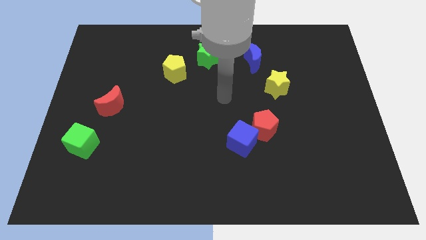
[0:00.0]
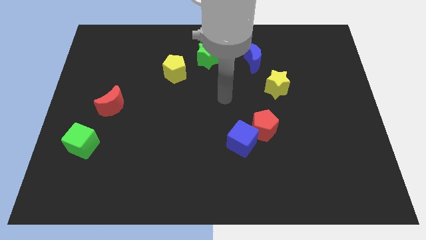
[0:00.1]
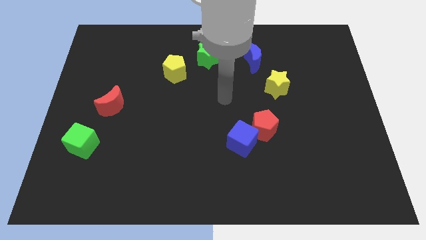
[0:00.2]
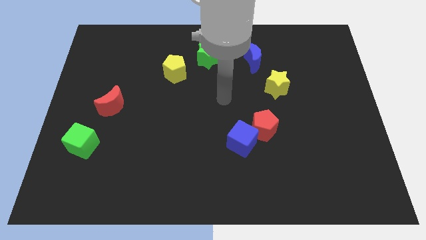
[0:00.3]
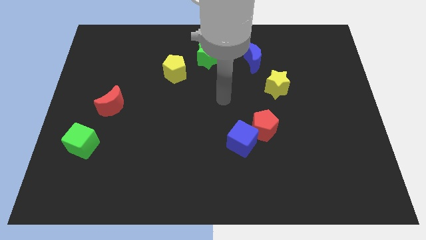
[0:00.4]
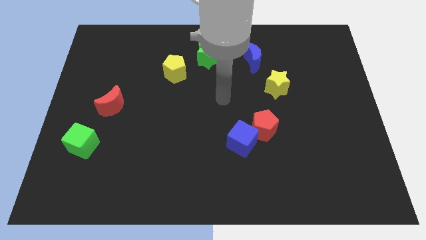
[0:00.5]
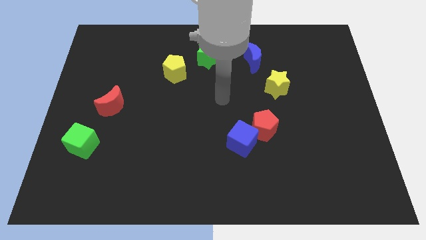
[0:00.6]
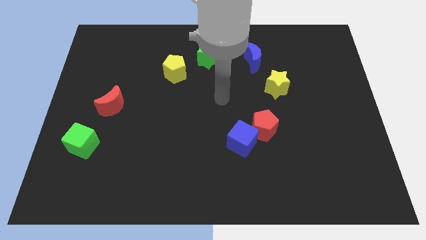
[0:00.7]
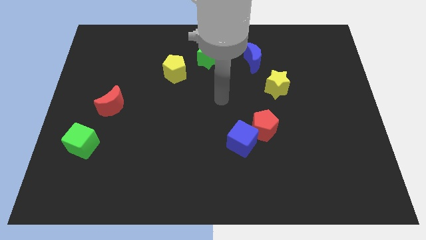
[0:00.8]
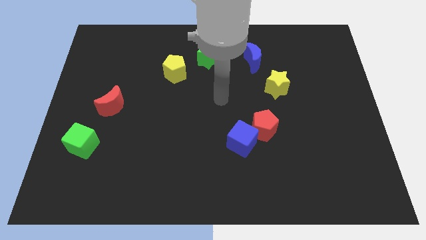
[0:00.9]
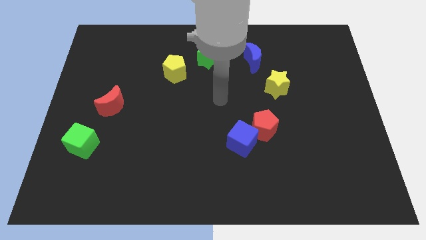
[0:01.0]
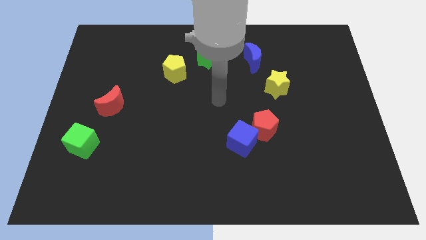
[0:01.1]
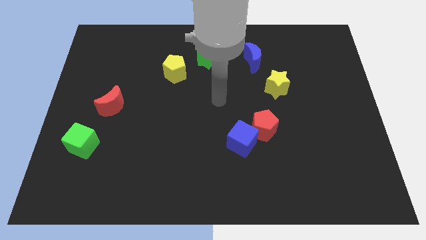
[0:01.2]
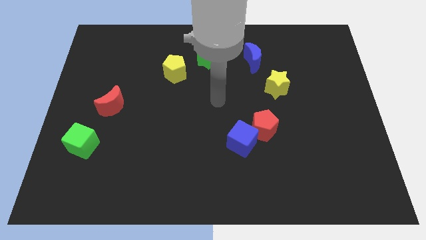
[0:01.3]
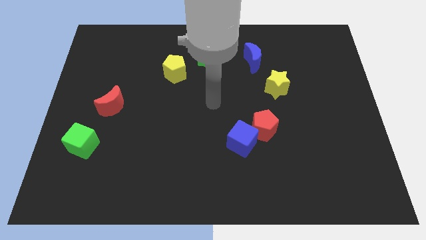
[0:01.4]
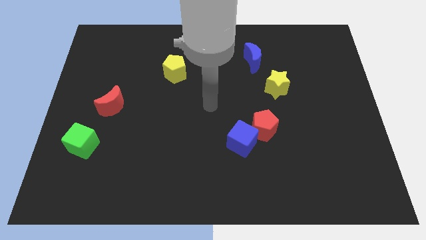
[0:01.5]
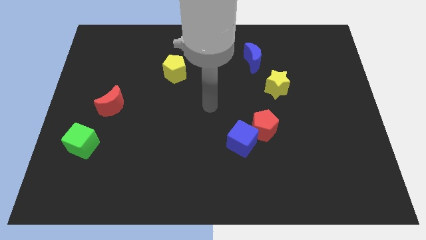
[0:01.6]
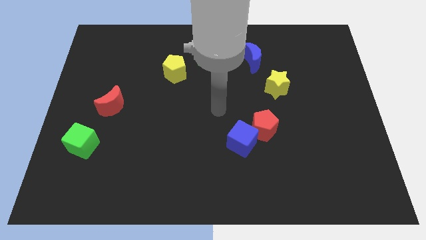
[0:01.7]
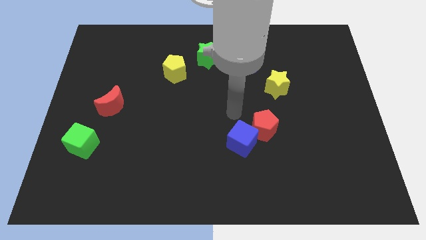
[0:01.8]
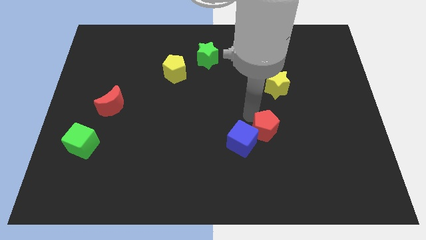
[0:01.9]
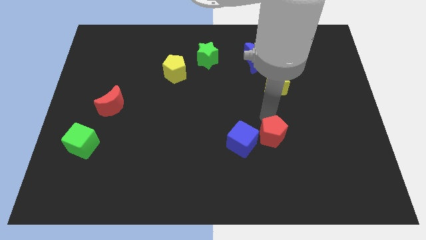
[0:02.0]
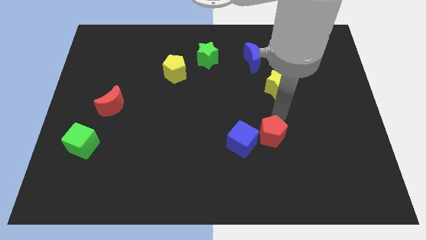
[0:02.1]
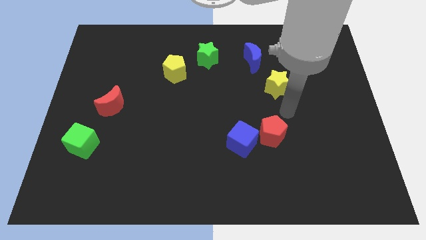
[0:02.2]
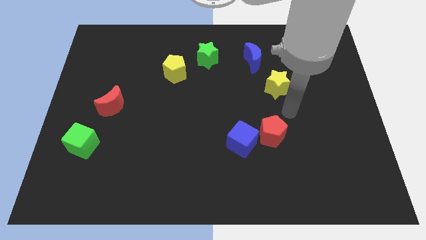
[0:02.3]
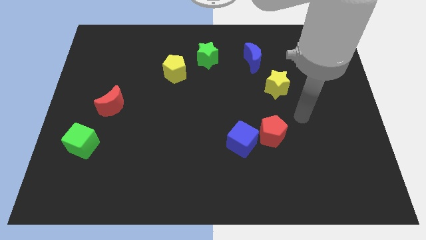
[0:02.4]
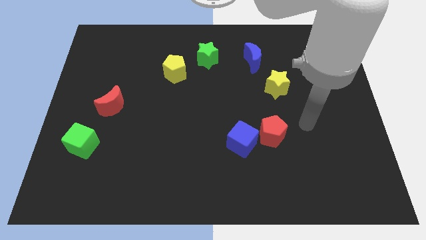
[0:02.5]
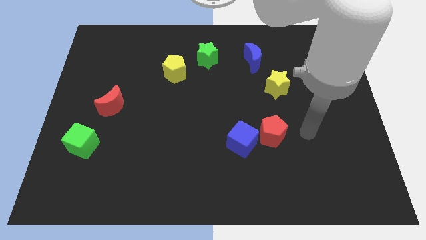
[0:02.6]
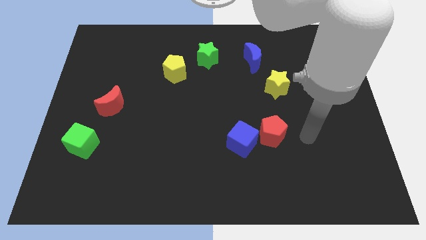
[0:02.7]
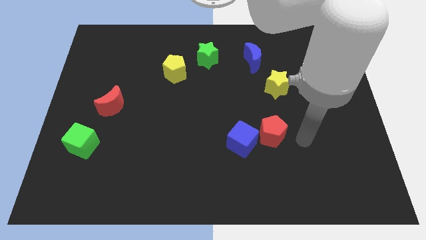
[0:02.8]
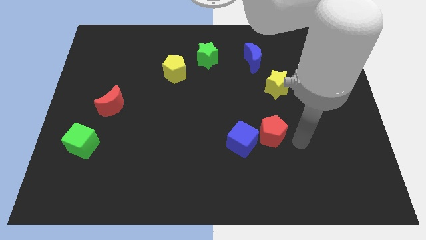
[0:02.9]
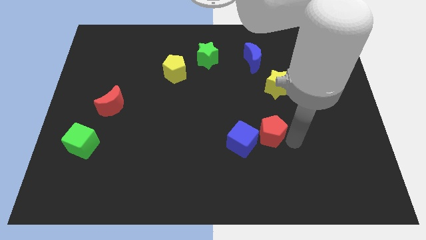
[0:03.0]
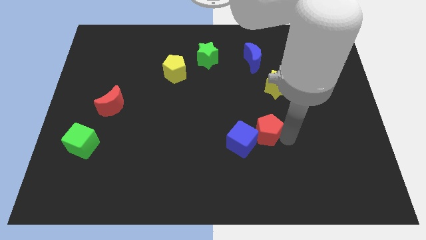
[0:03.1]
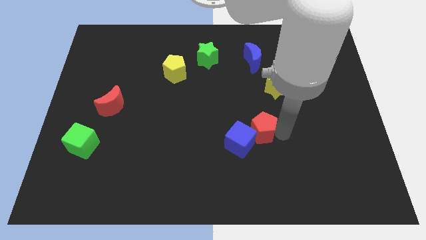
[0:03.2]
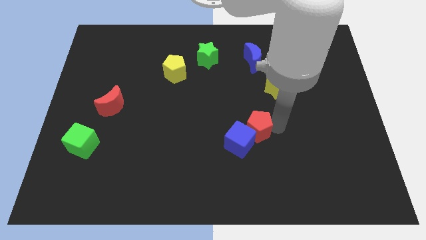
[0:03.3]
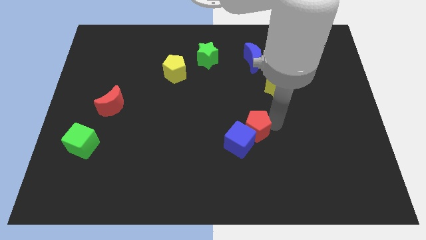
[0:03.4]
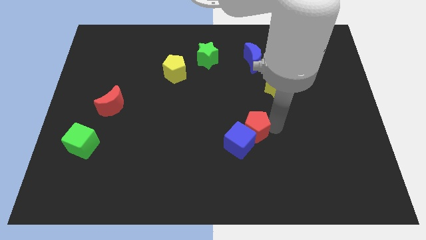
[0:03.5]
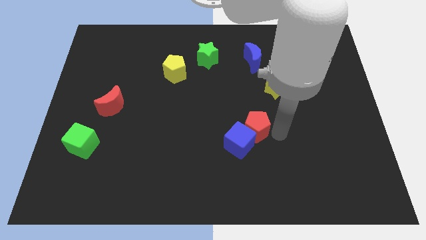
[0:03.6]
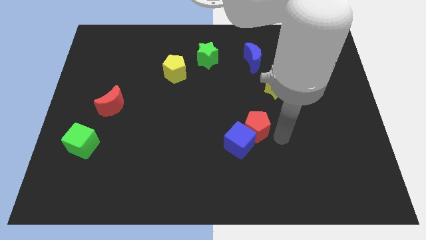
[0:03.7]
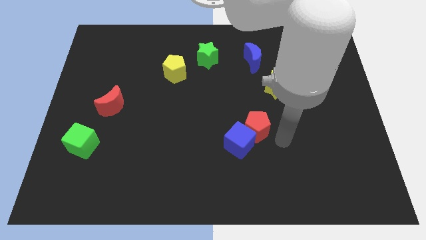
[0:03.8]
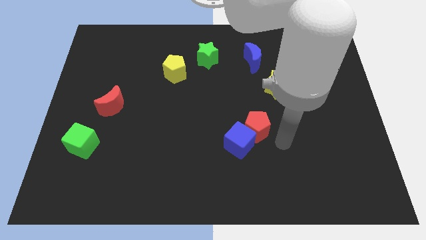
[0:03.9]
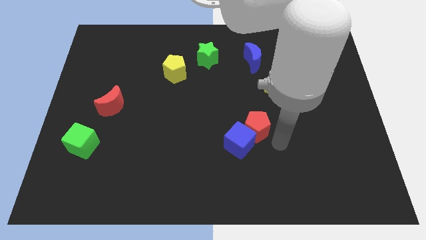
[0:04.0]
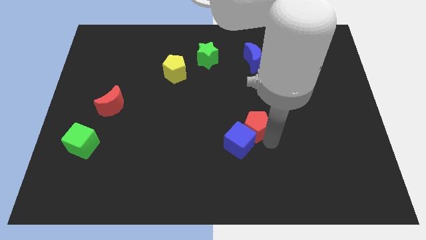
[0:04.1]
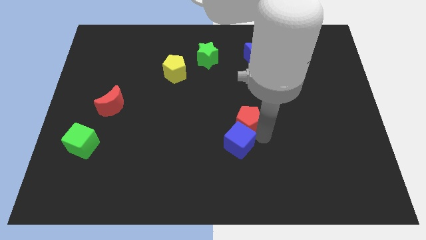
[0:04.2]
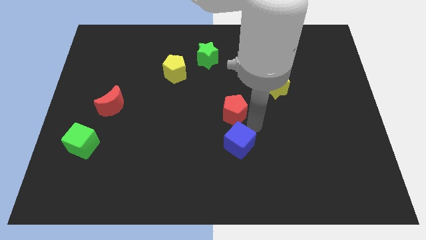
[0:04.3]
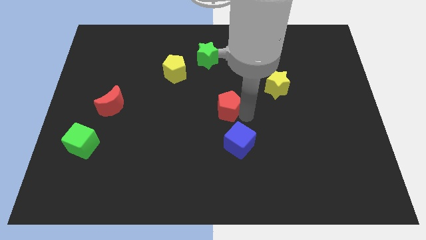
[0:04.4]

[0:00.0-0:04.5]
move the red pentagon to the top of the blue cube

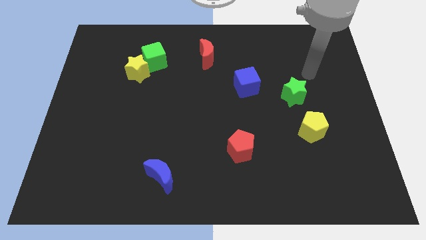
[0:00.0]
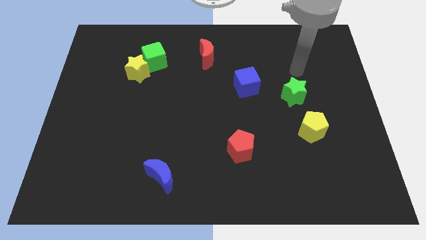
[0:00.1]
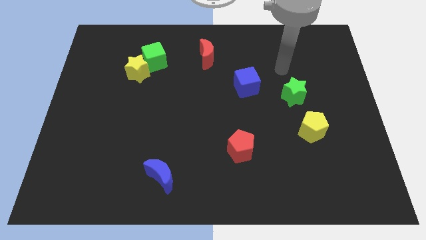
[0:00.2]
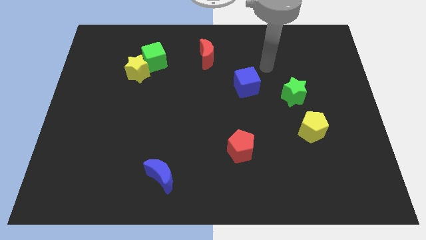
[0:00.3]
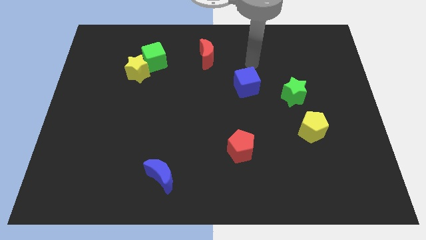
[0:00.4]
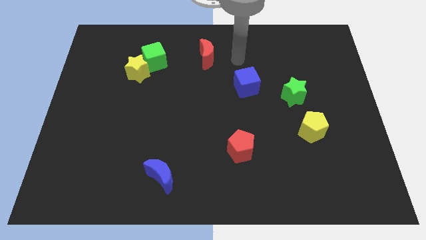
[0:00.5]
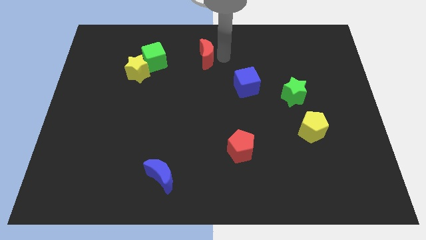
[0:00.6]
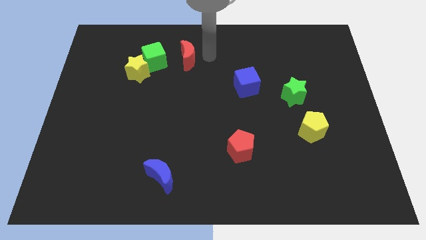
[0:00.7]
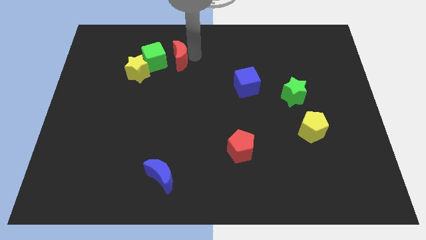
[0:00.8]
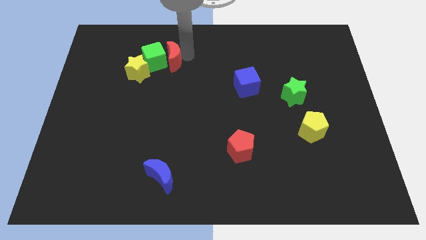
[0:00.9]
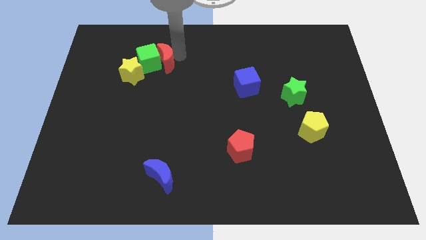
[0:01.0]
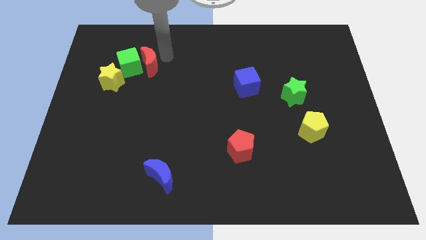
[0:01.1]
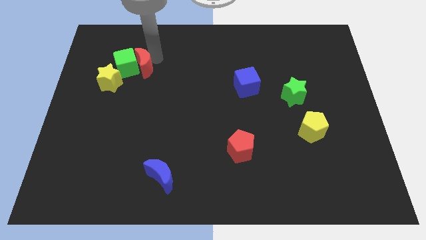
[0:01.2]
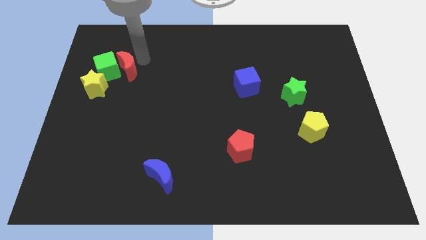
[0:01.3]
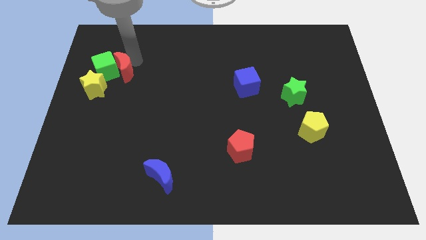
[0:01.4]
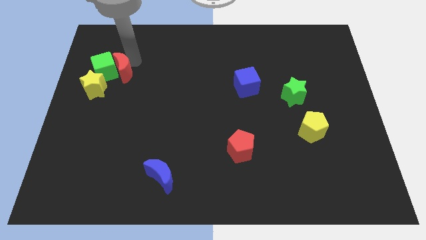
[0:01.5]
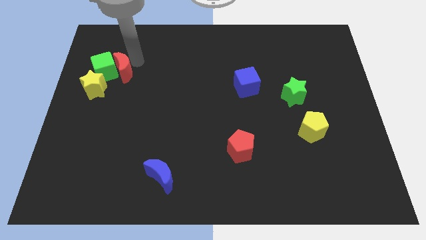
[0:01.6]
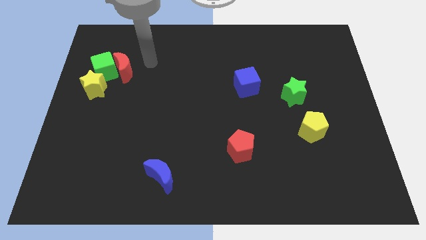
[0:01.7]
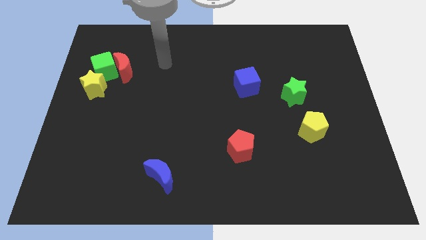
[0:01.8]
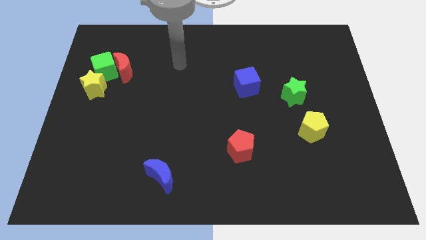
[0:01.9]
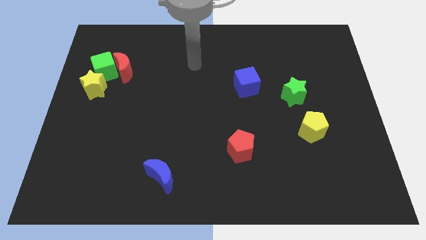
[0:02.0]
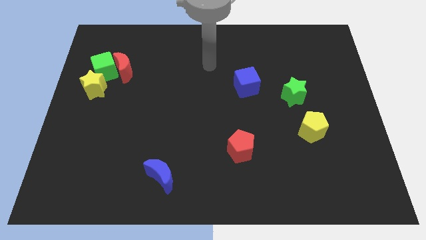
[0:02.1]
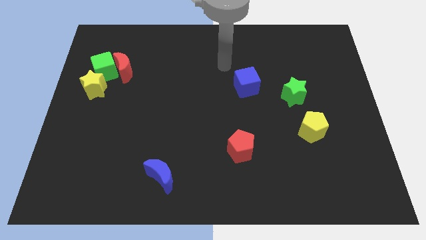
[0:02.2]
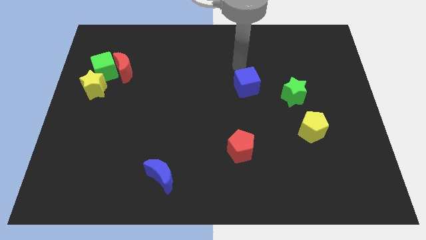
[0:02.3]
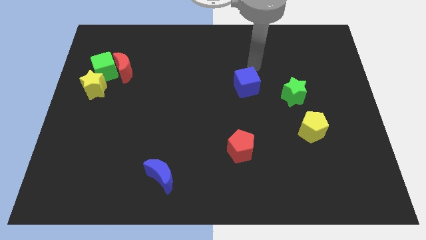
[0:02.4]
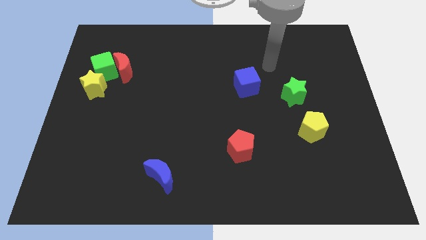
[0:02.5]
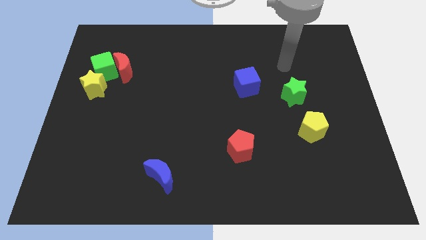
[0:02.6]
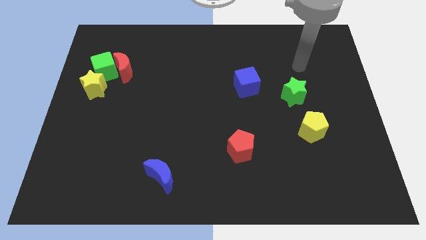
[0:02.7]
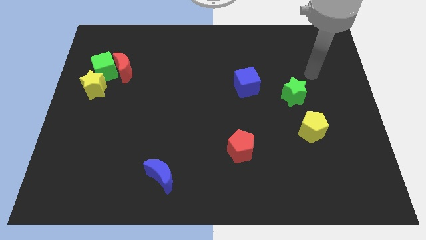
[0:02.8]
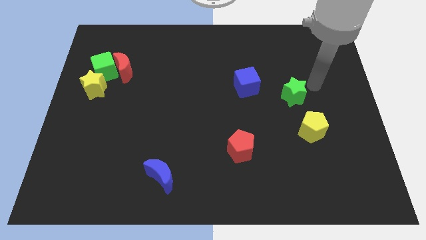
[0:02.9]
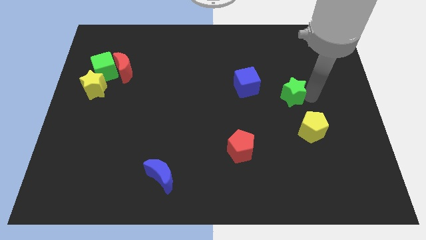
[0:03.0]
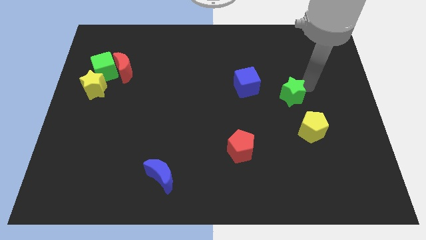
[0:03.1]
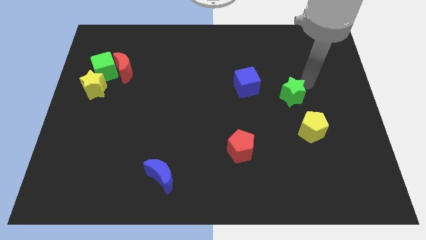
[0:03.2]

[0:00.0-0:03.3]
push the red moon to the left

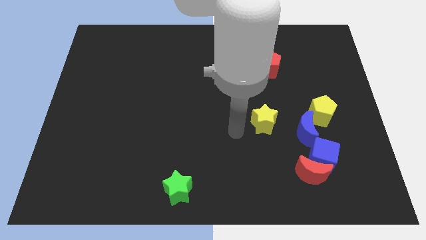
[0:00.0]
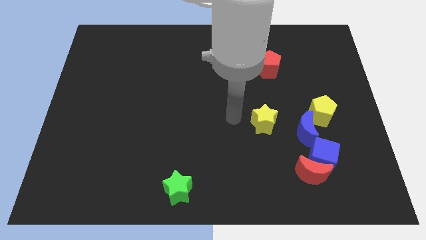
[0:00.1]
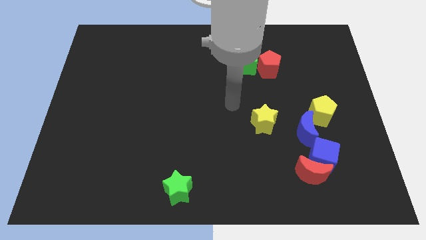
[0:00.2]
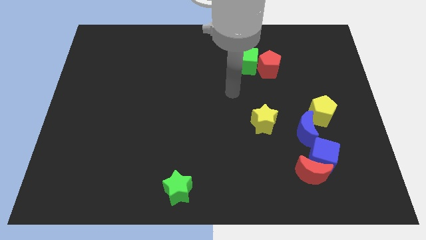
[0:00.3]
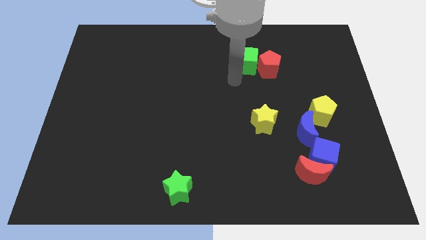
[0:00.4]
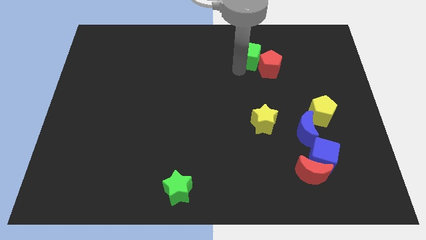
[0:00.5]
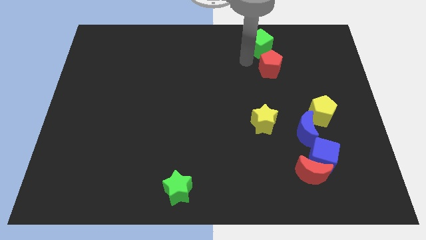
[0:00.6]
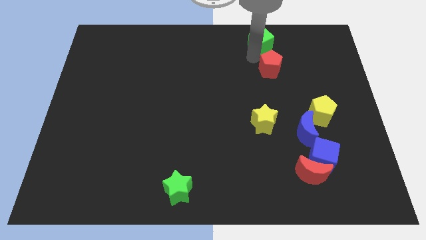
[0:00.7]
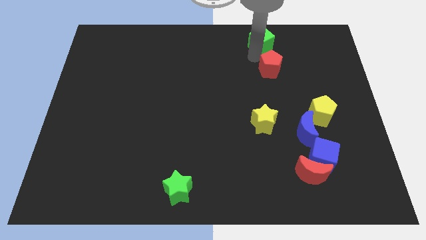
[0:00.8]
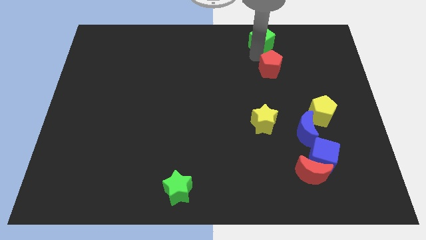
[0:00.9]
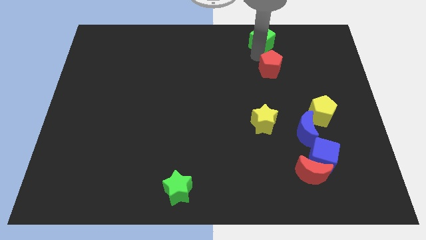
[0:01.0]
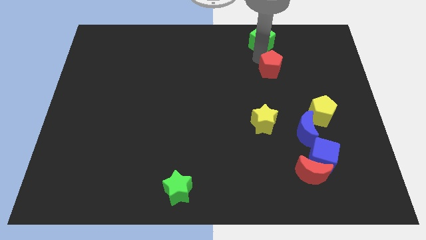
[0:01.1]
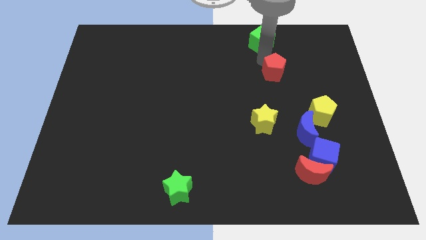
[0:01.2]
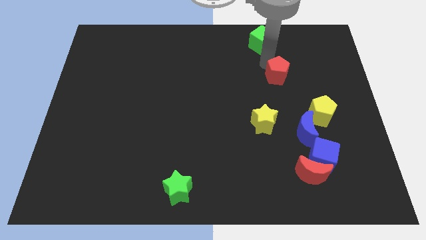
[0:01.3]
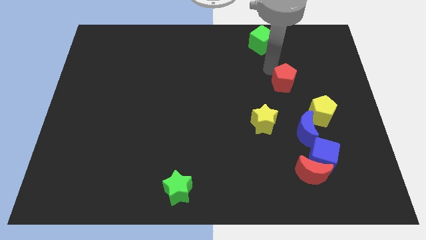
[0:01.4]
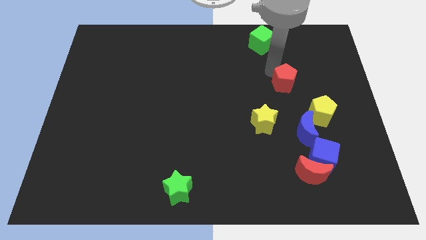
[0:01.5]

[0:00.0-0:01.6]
separate the red pentagon from the green cube
